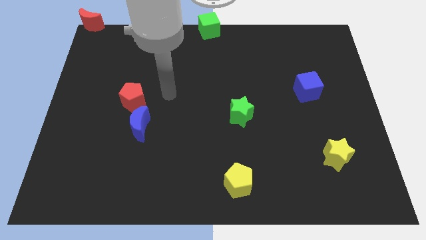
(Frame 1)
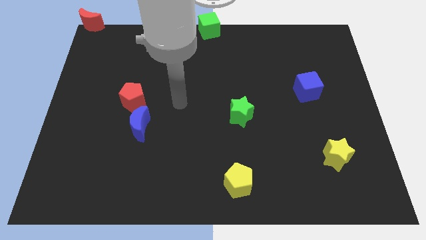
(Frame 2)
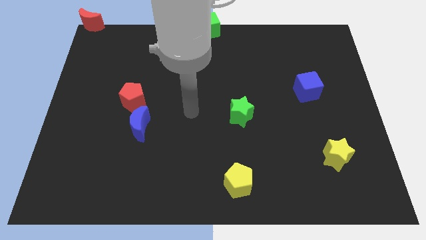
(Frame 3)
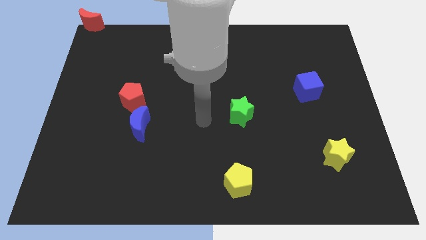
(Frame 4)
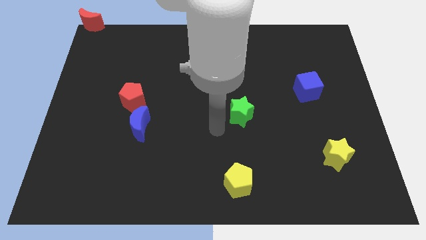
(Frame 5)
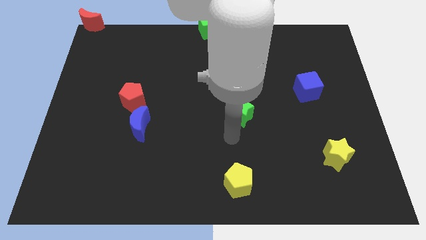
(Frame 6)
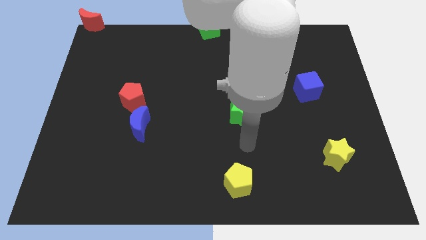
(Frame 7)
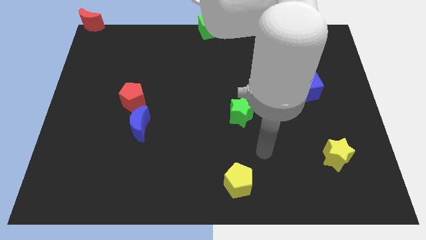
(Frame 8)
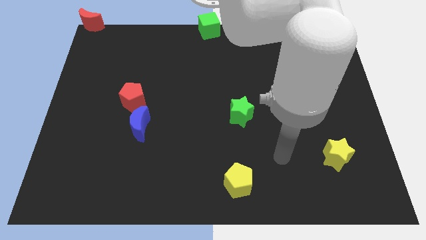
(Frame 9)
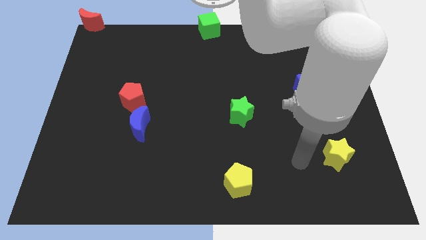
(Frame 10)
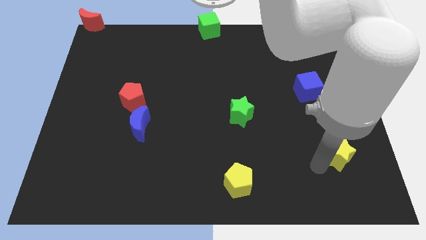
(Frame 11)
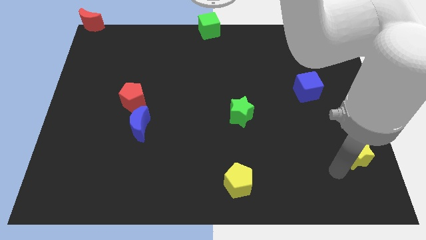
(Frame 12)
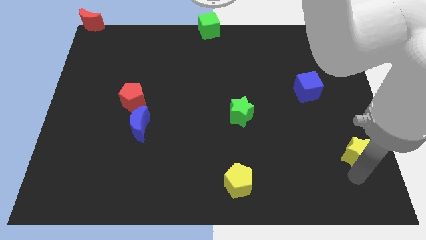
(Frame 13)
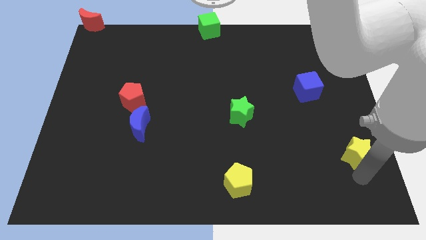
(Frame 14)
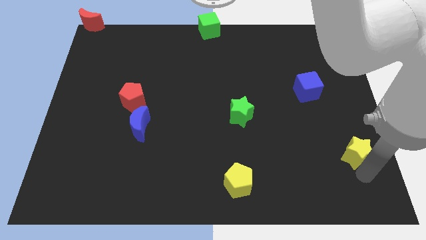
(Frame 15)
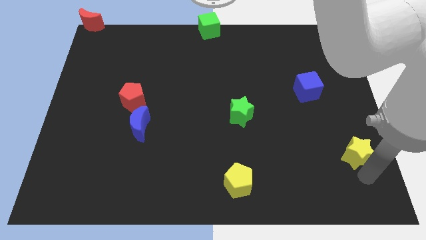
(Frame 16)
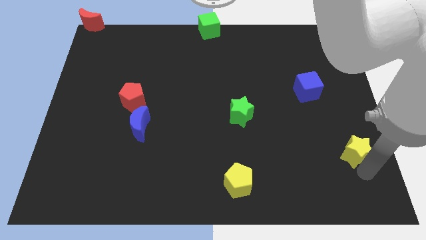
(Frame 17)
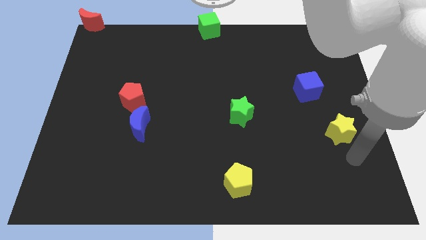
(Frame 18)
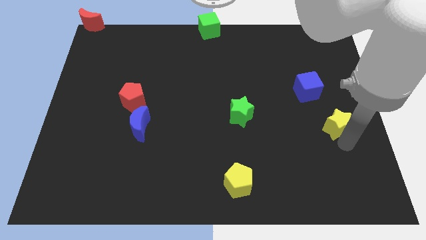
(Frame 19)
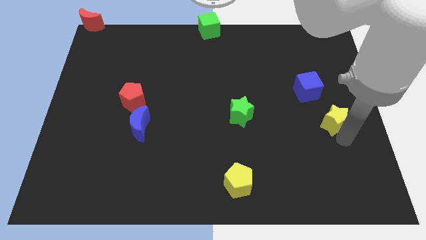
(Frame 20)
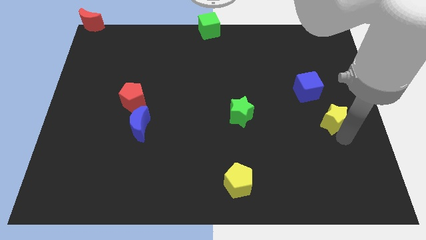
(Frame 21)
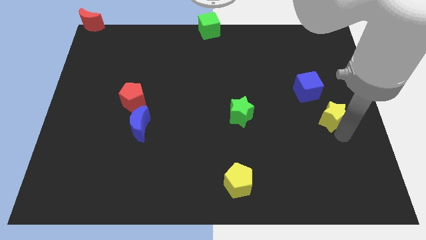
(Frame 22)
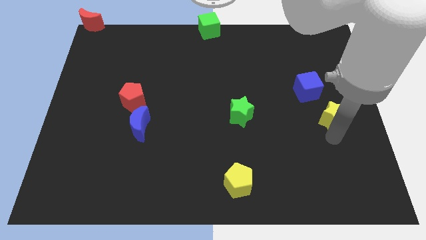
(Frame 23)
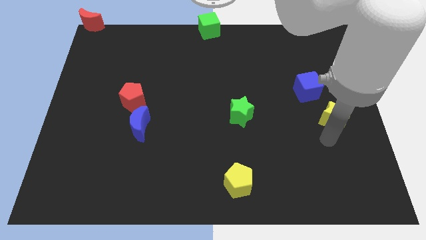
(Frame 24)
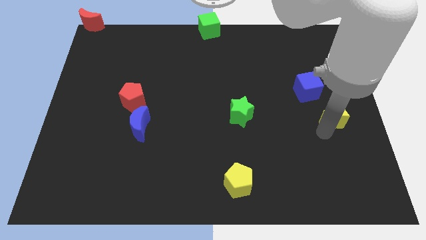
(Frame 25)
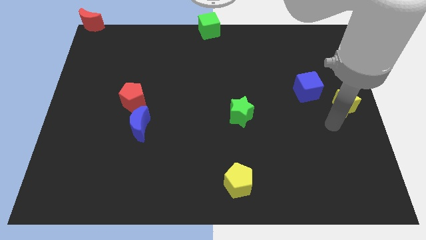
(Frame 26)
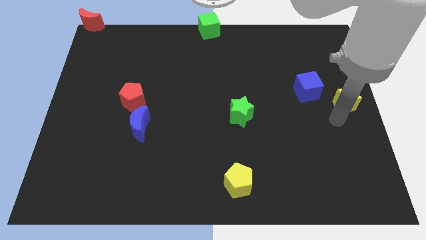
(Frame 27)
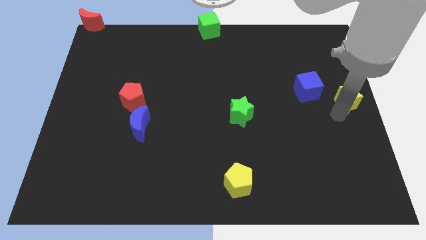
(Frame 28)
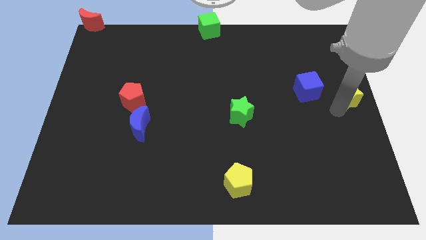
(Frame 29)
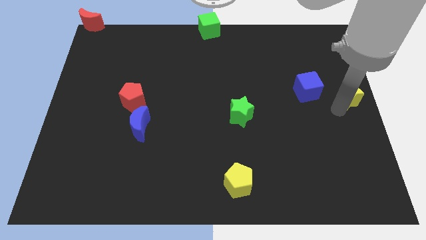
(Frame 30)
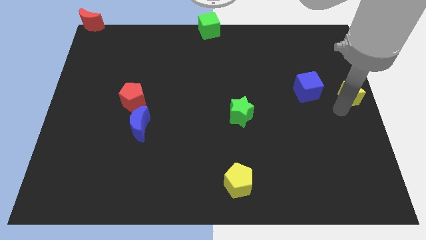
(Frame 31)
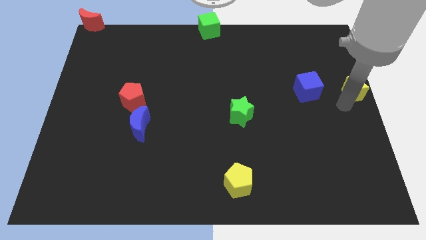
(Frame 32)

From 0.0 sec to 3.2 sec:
move the yellow star diagonal to the right of the blue cube

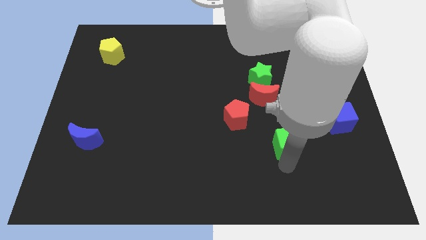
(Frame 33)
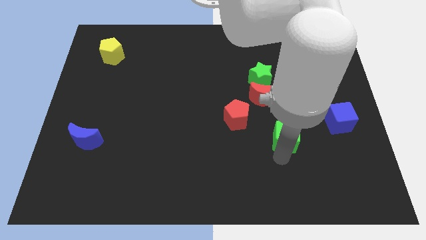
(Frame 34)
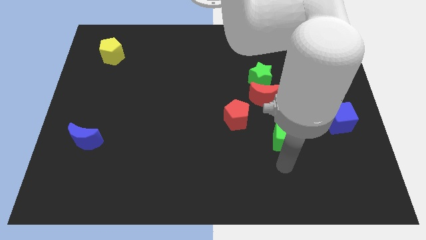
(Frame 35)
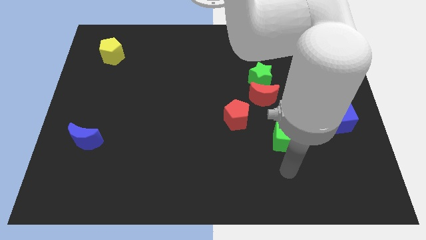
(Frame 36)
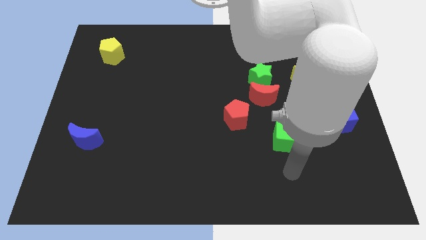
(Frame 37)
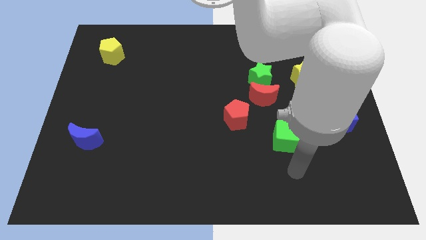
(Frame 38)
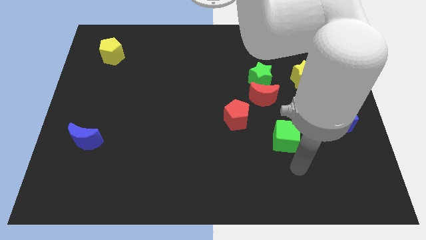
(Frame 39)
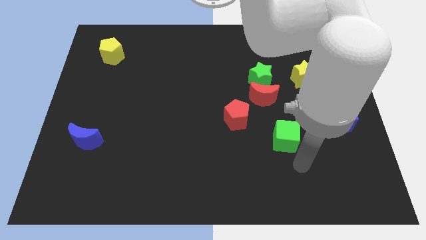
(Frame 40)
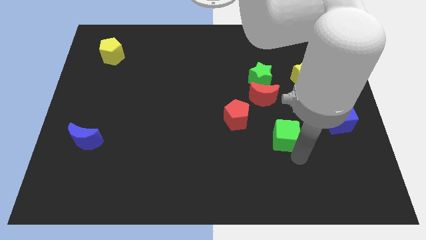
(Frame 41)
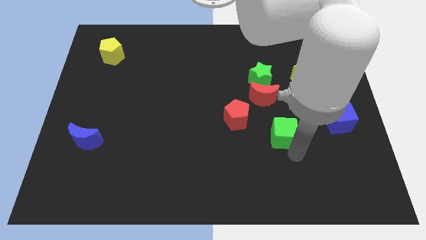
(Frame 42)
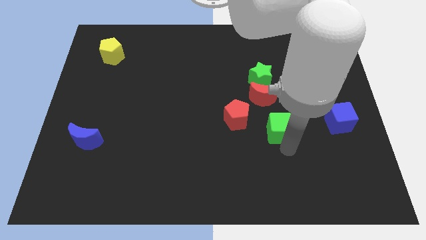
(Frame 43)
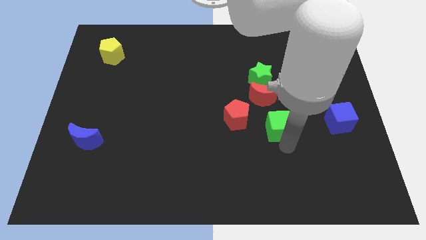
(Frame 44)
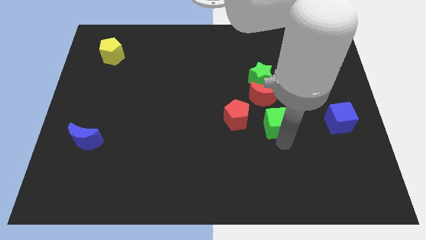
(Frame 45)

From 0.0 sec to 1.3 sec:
push green cube upwards

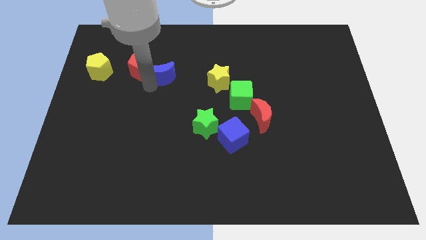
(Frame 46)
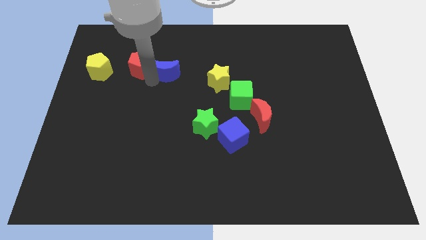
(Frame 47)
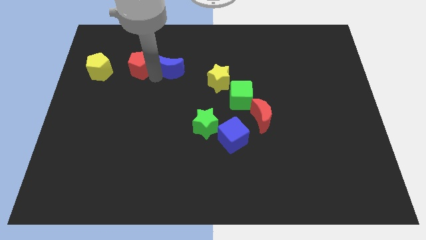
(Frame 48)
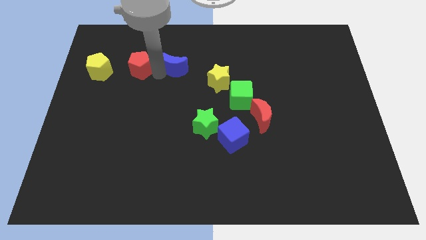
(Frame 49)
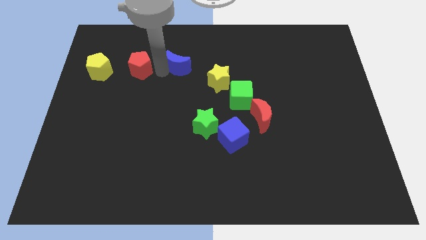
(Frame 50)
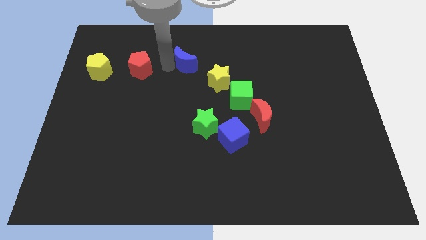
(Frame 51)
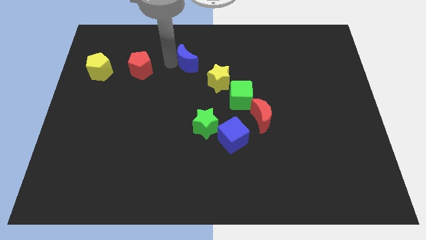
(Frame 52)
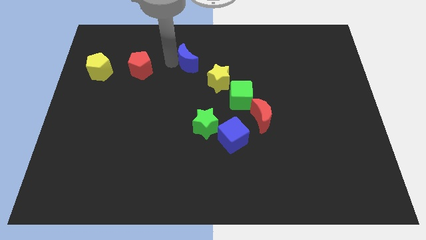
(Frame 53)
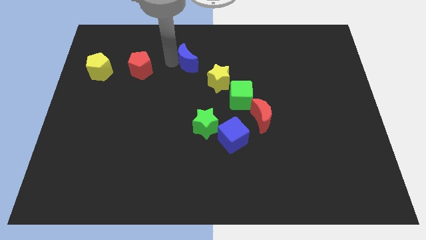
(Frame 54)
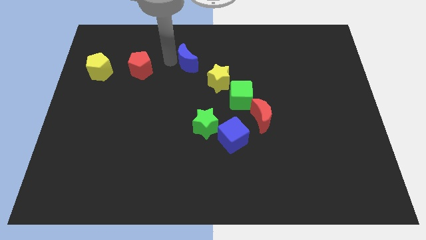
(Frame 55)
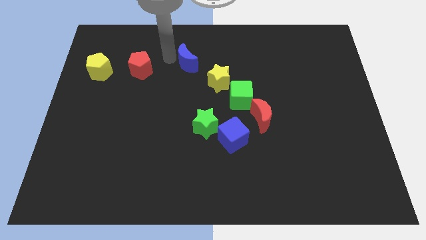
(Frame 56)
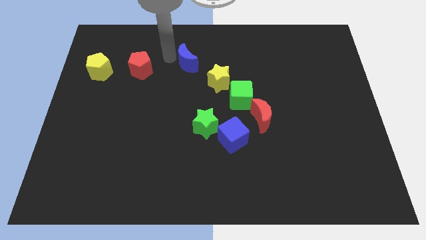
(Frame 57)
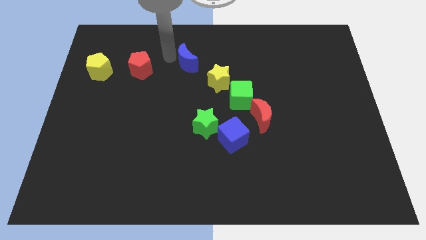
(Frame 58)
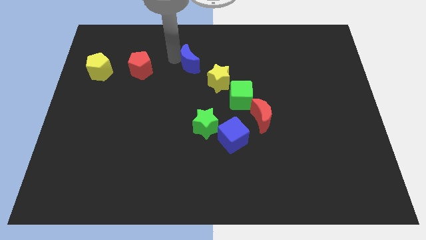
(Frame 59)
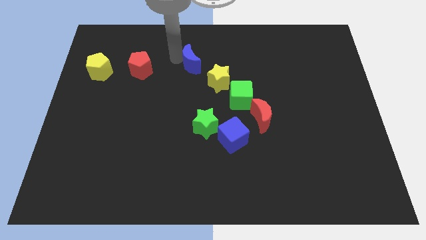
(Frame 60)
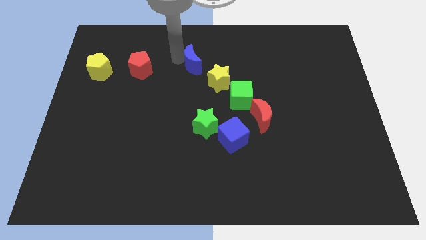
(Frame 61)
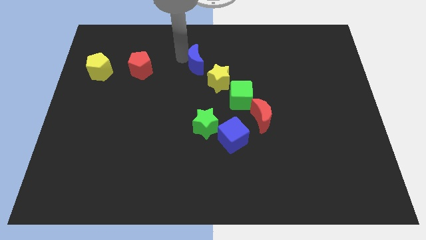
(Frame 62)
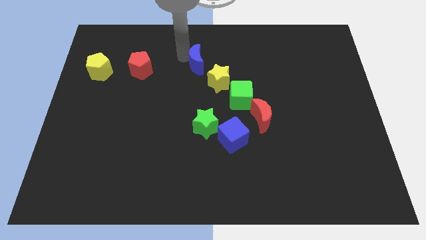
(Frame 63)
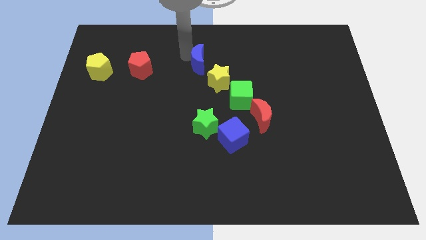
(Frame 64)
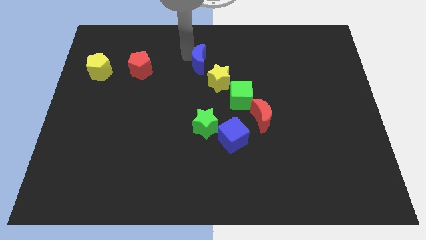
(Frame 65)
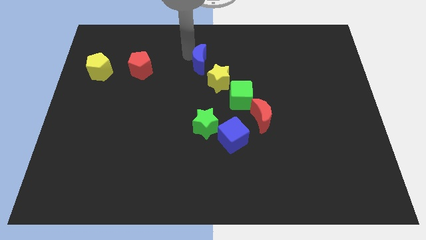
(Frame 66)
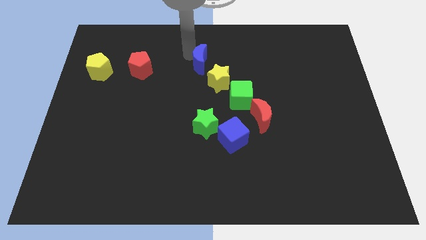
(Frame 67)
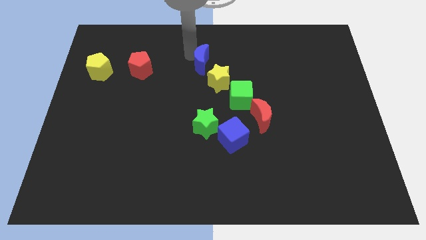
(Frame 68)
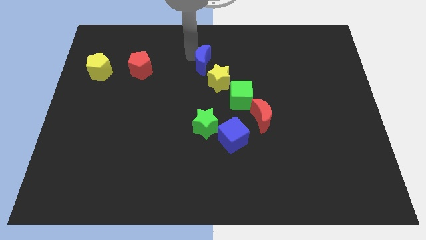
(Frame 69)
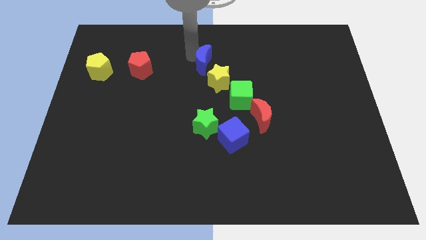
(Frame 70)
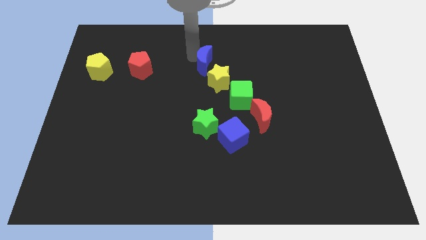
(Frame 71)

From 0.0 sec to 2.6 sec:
push the blue crescent close to the yellow star

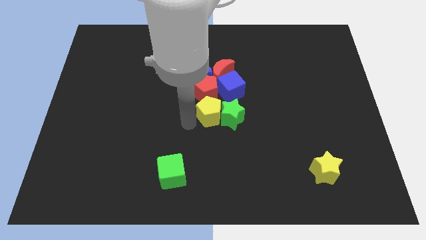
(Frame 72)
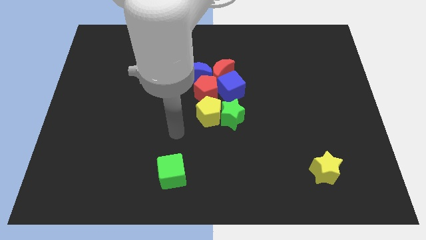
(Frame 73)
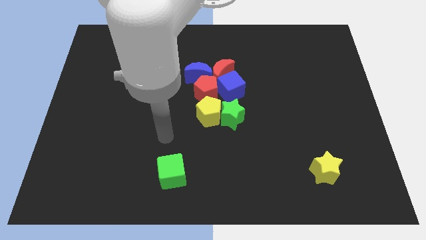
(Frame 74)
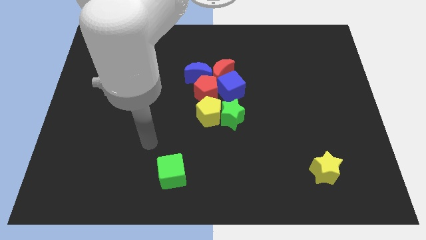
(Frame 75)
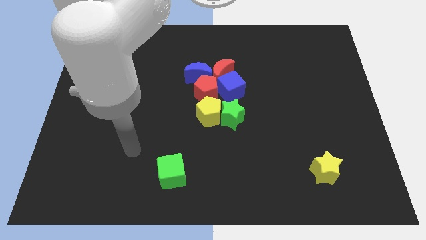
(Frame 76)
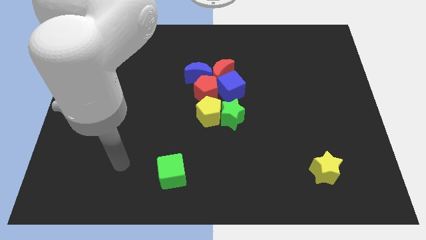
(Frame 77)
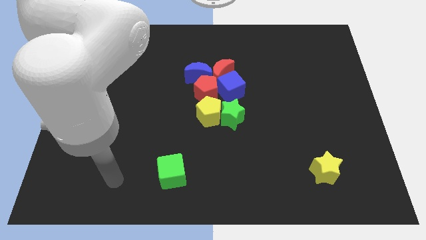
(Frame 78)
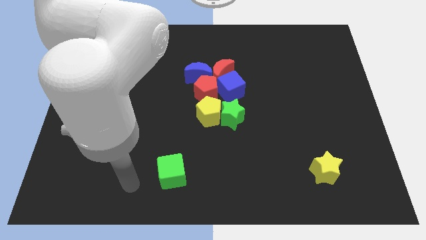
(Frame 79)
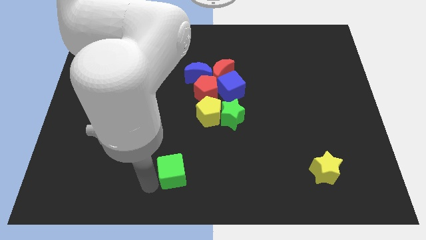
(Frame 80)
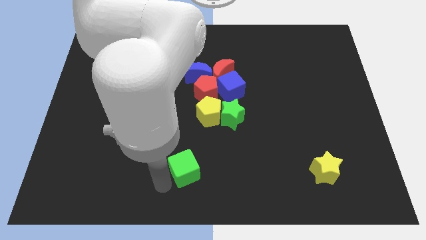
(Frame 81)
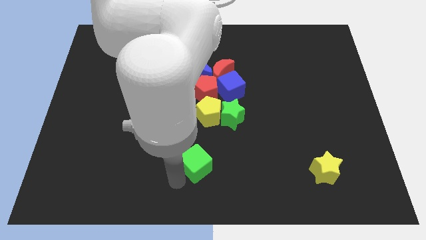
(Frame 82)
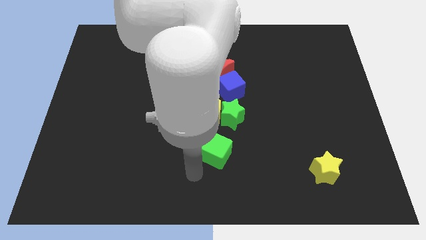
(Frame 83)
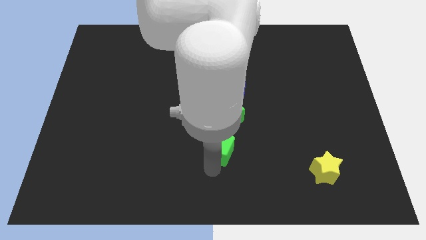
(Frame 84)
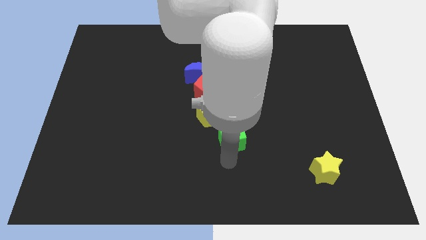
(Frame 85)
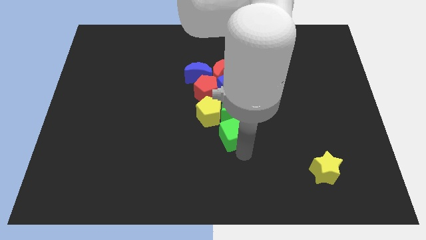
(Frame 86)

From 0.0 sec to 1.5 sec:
place the green cube at the bottom of the green star

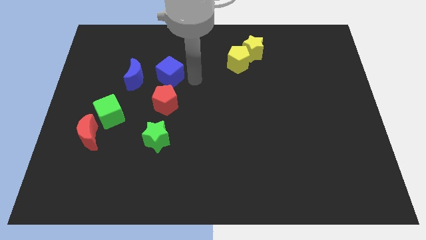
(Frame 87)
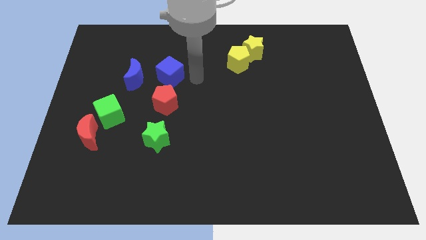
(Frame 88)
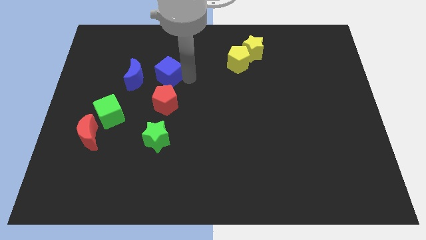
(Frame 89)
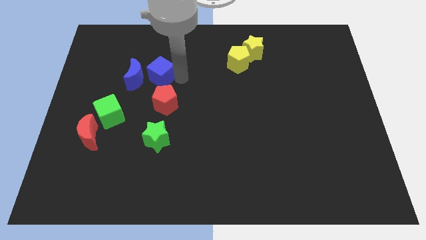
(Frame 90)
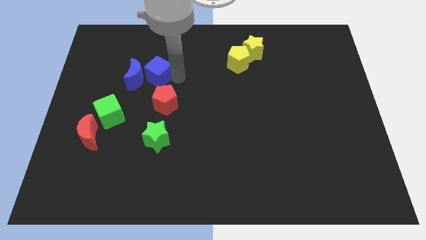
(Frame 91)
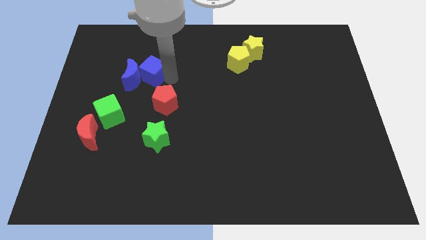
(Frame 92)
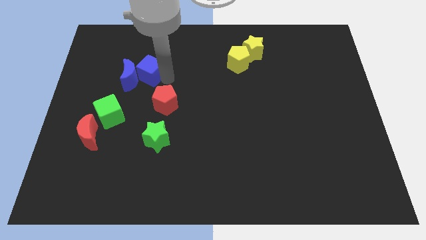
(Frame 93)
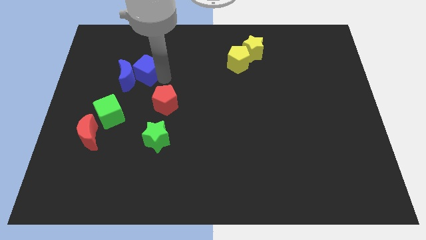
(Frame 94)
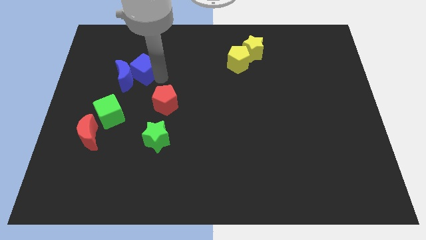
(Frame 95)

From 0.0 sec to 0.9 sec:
push the blue cube into the blue crescent
